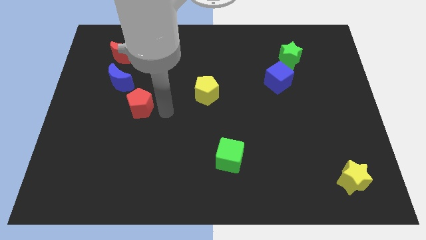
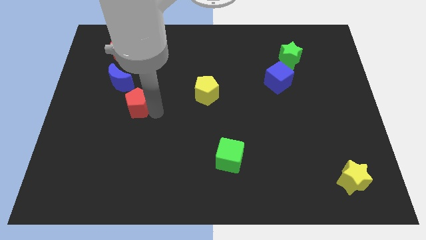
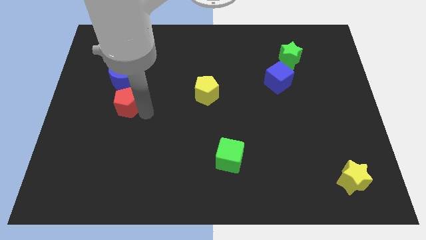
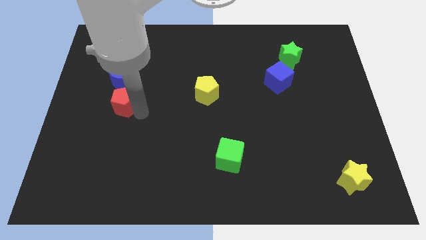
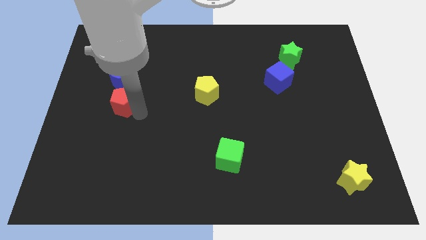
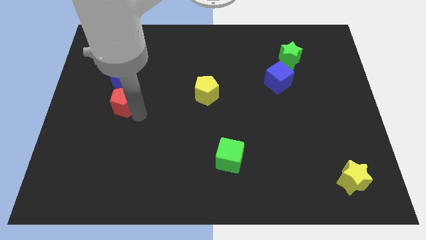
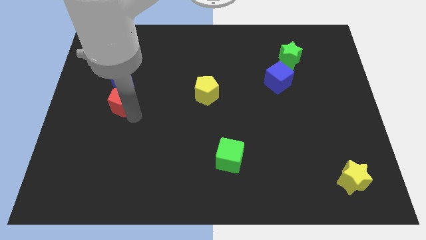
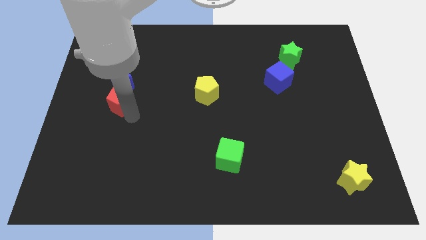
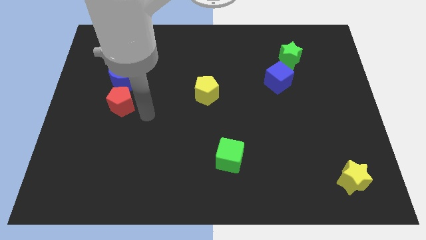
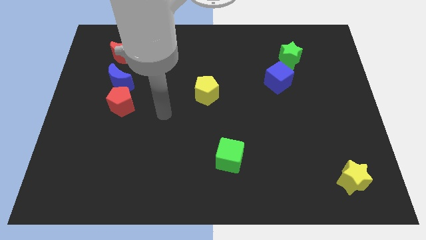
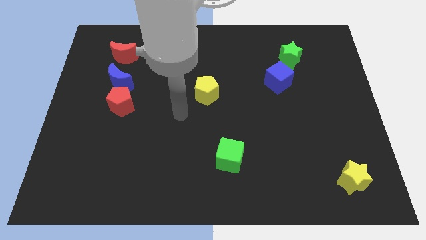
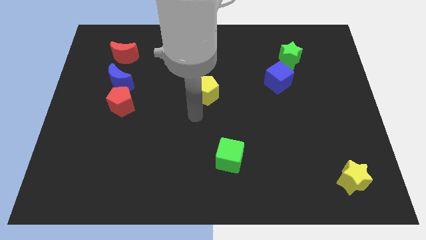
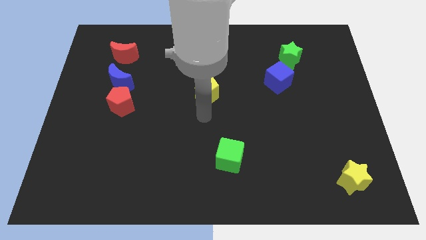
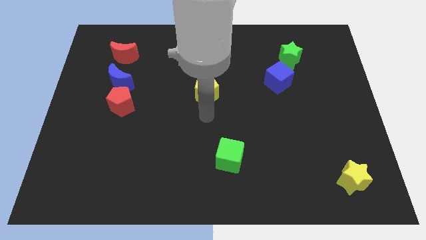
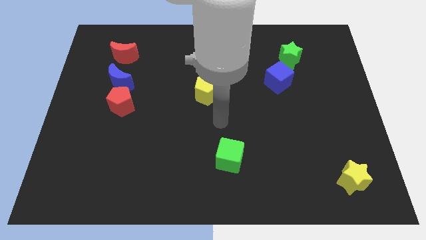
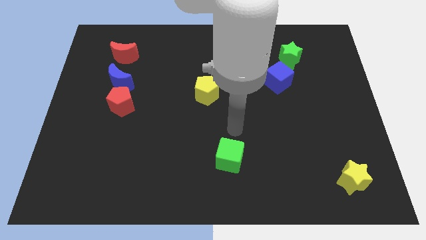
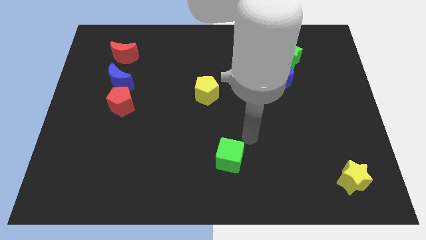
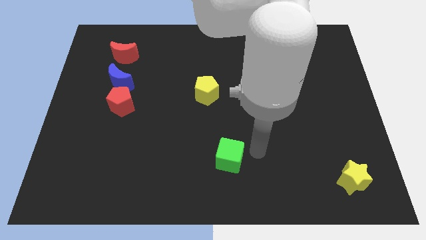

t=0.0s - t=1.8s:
place the red pentagon below the blue crescent

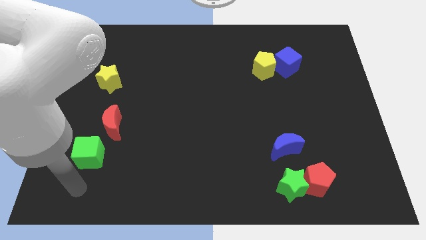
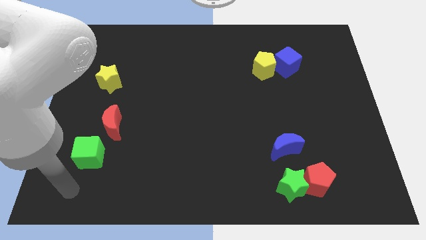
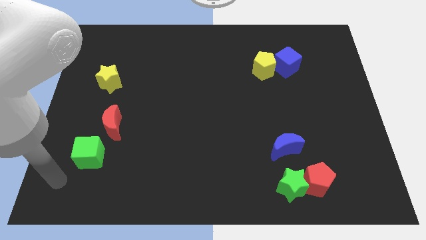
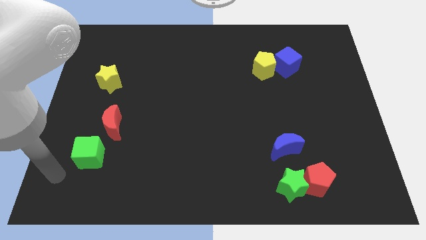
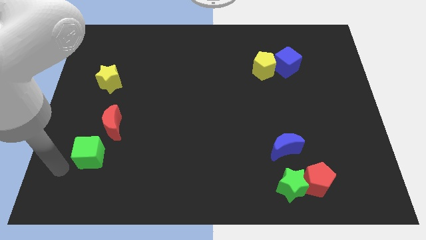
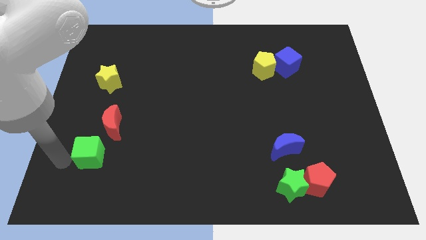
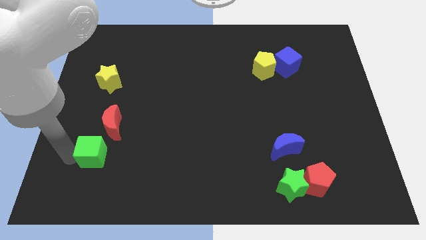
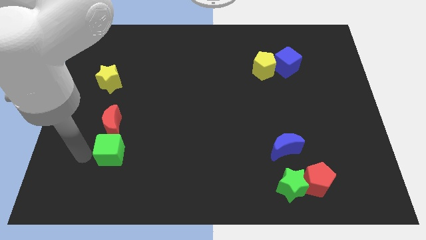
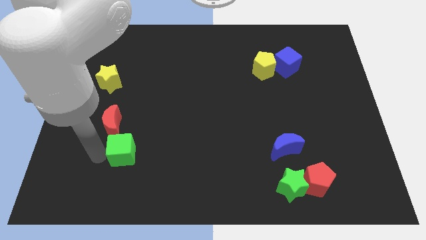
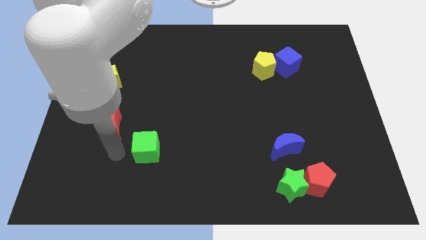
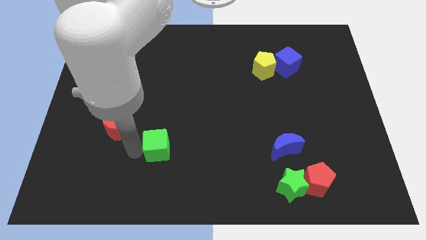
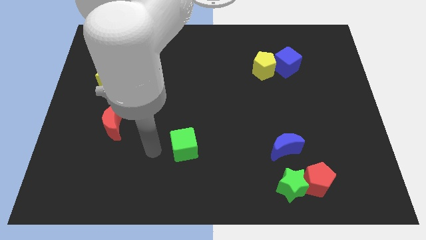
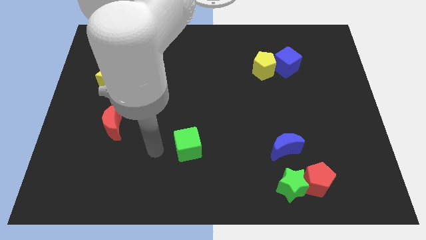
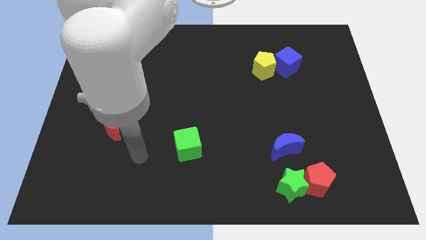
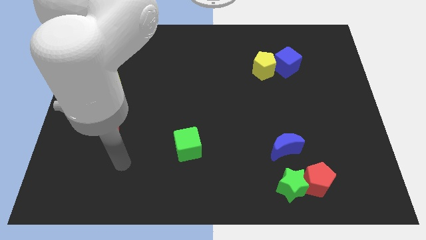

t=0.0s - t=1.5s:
move the green cube towards the bottom center

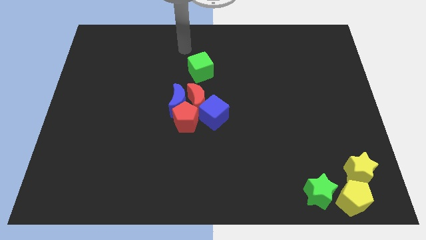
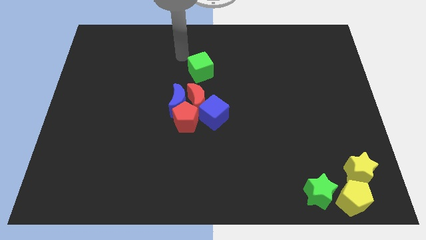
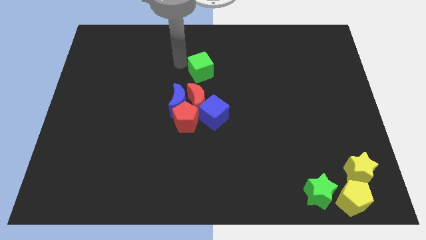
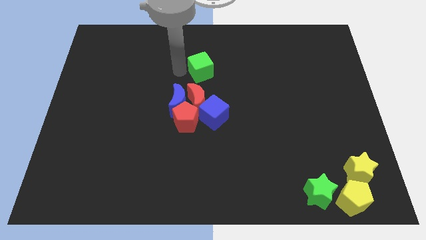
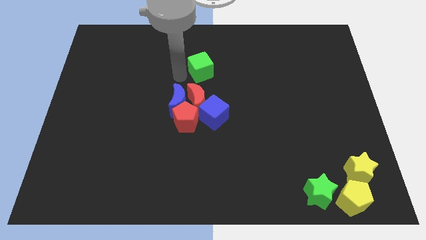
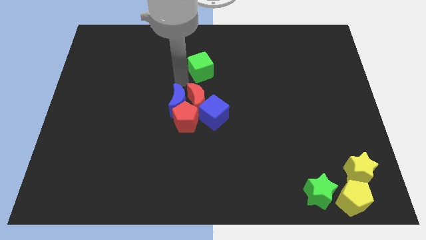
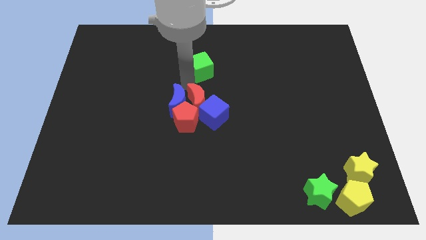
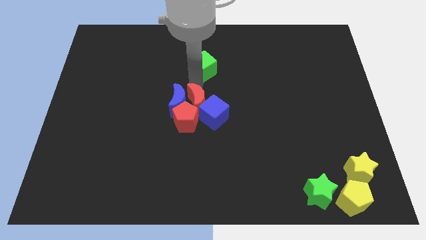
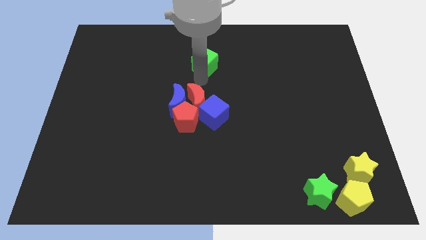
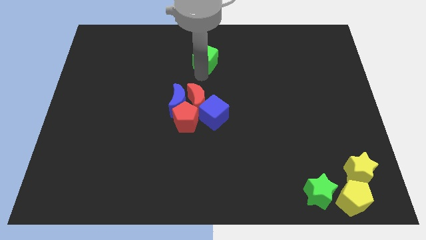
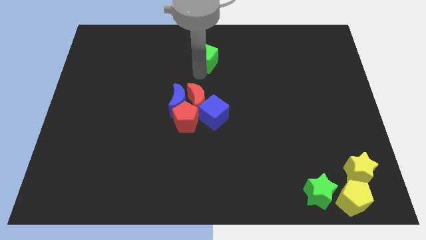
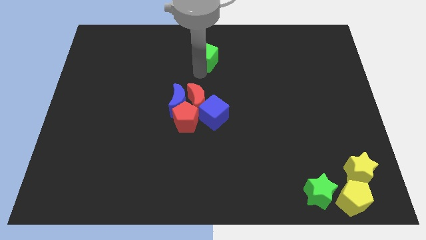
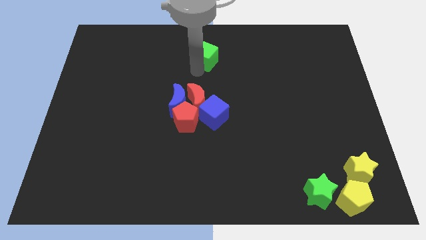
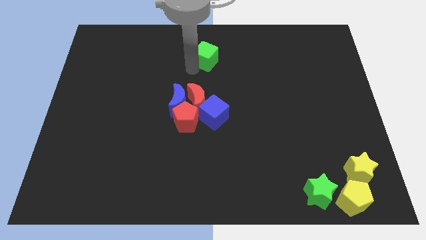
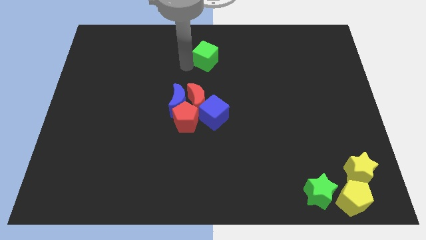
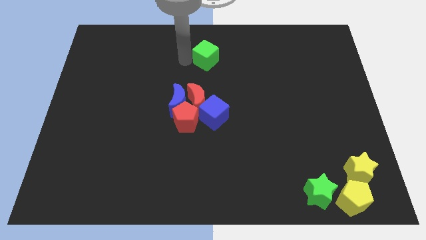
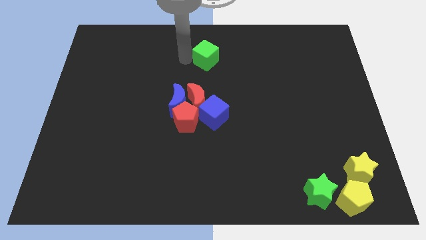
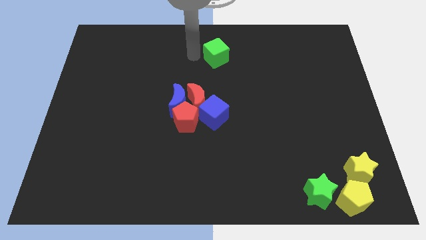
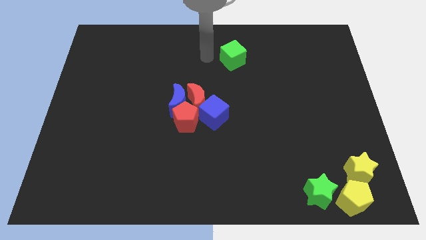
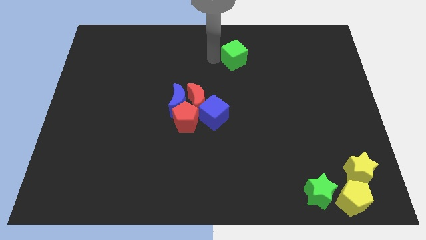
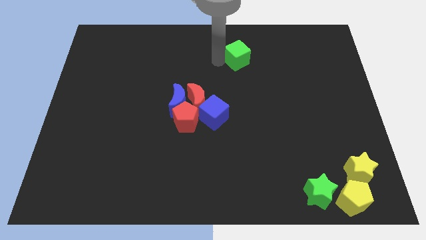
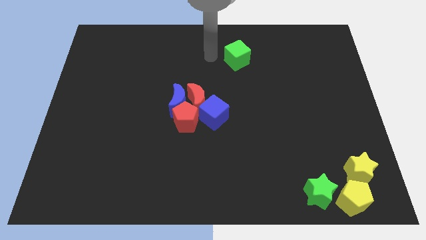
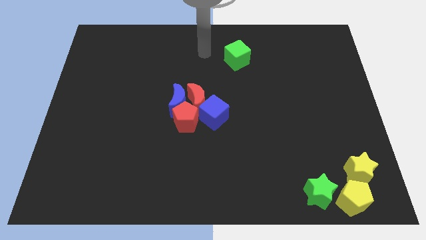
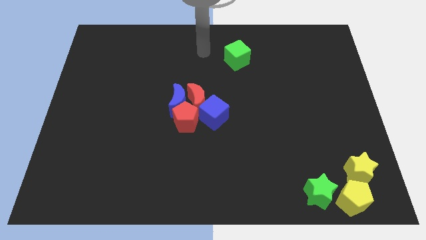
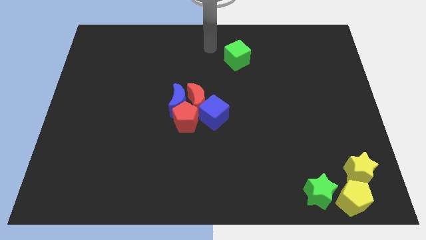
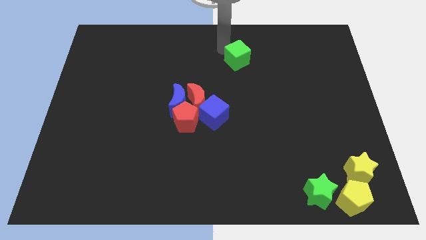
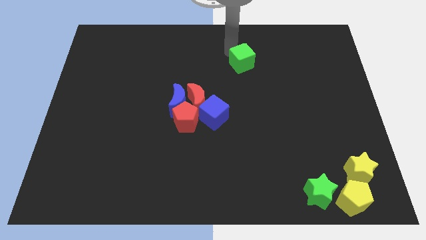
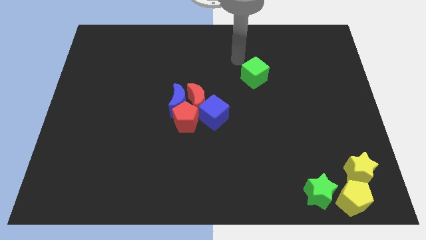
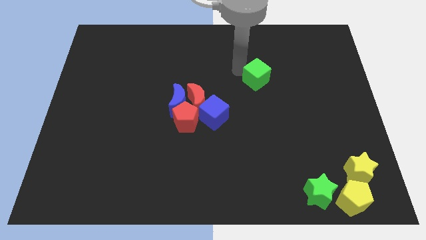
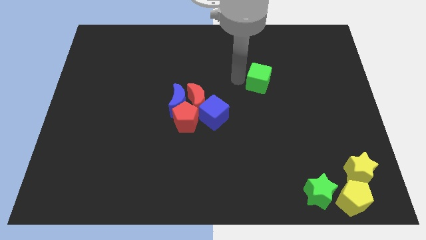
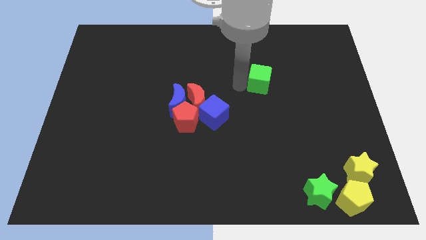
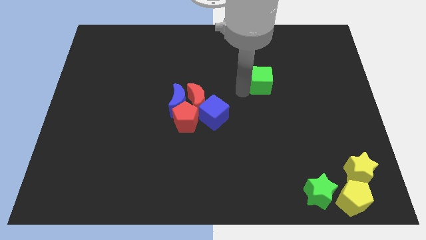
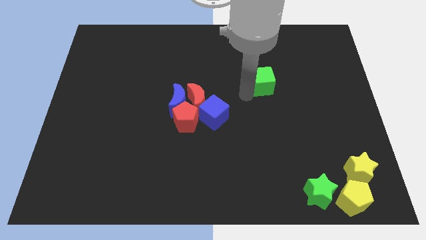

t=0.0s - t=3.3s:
move the green cube towards the right

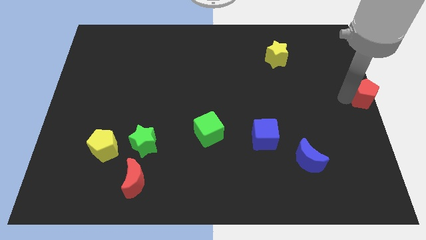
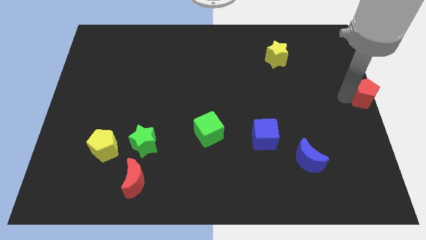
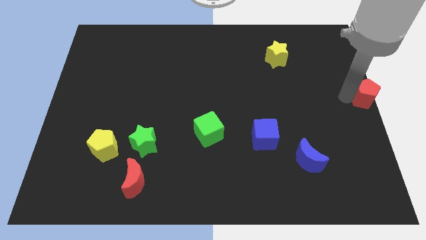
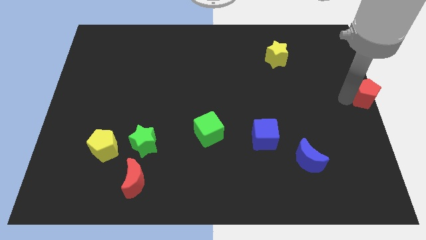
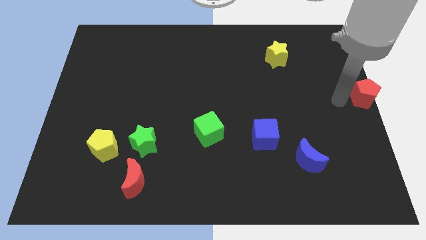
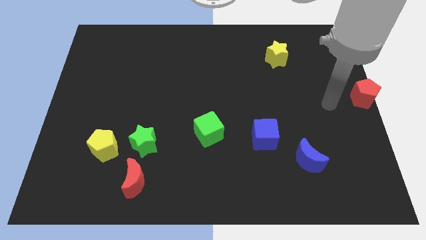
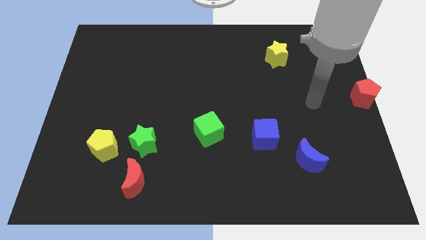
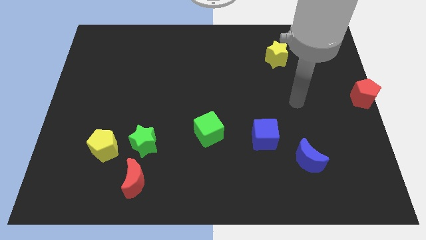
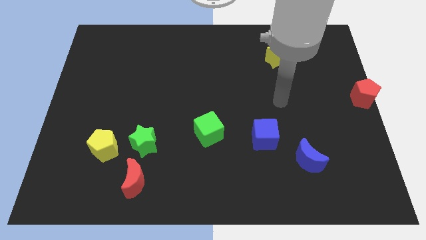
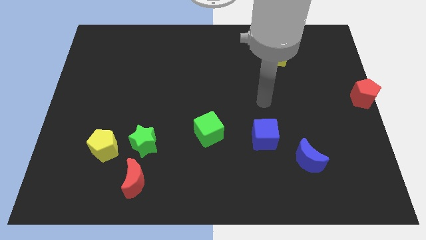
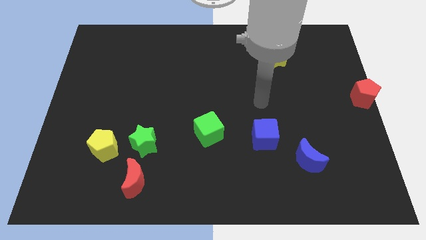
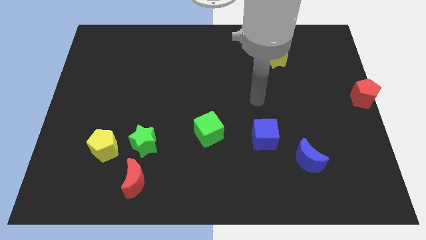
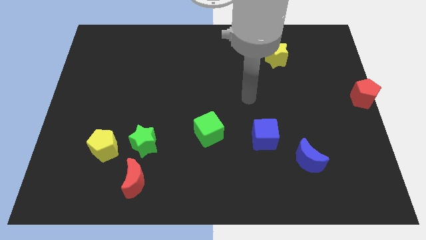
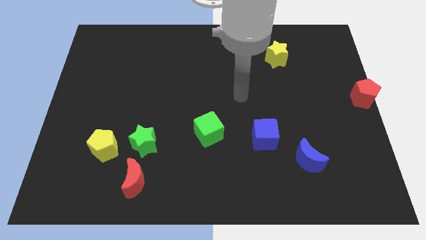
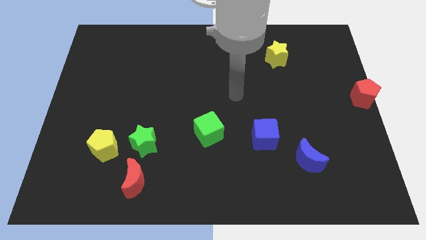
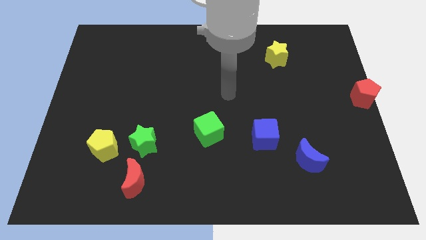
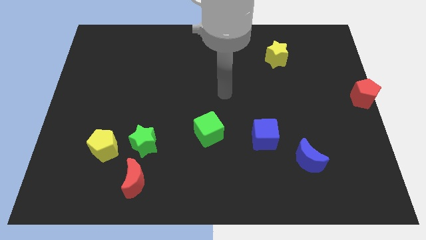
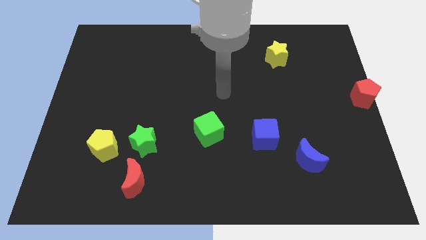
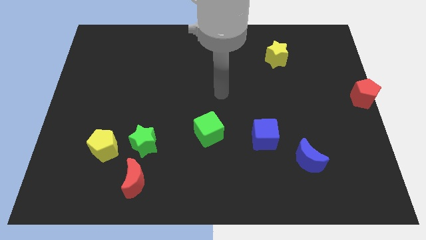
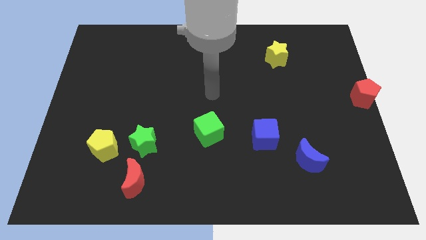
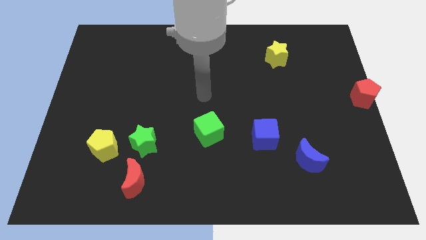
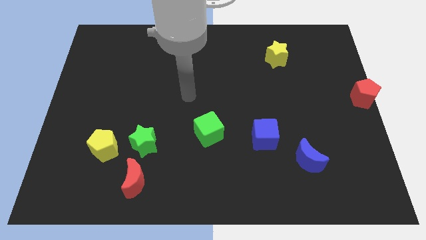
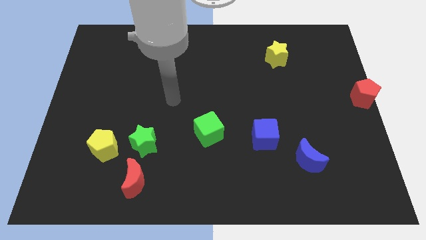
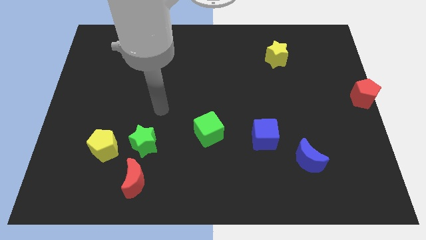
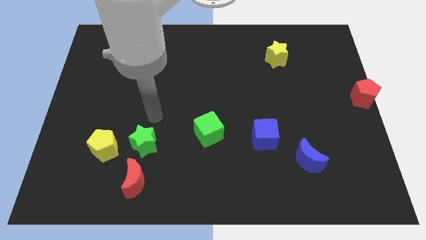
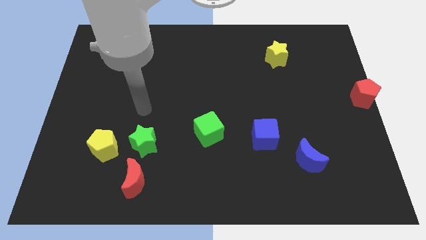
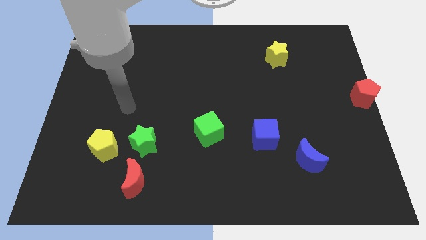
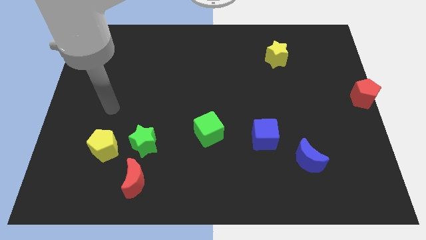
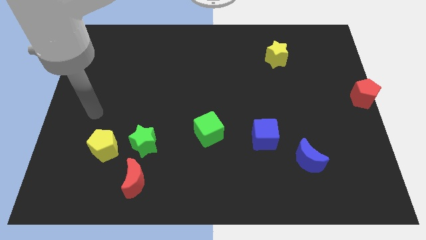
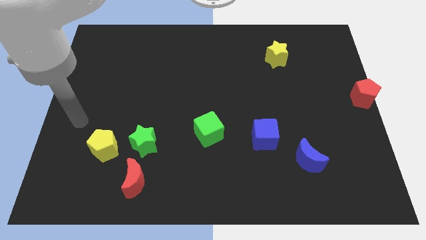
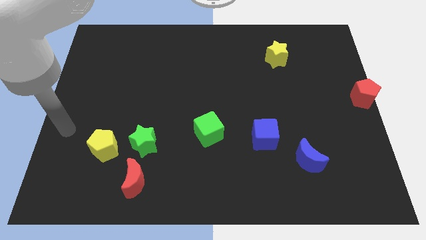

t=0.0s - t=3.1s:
move your hand away from red pentagon
